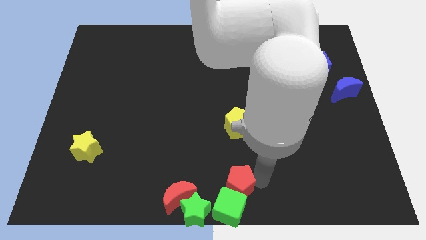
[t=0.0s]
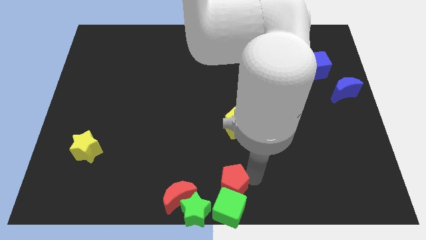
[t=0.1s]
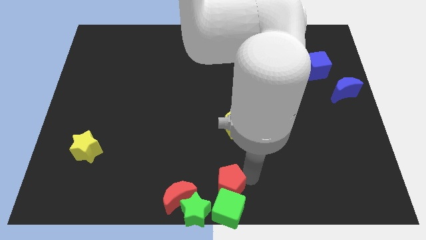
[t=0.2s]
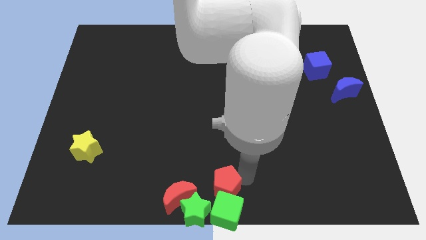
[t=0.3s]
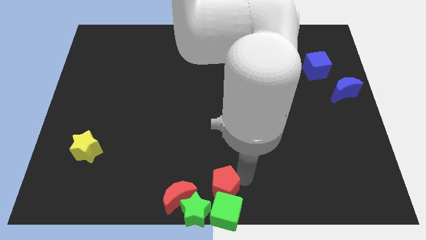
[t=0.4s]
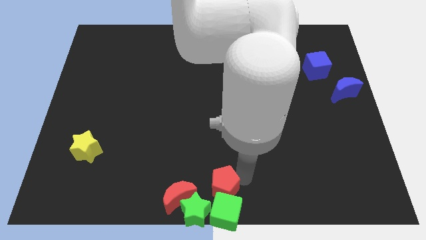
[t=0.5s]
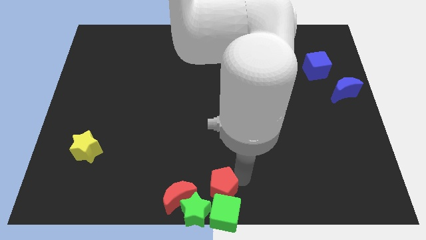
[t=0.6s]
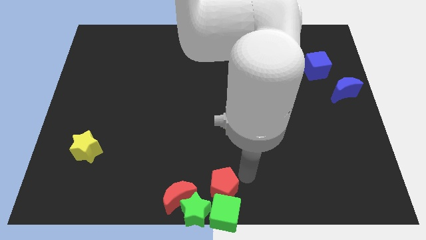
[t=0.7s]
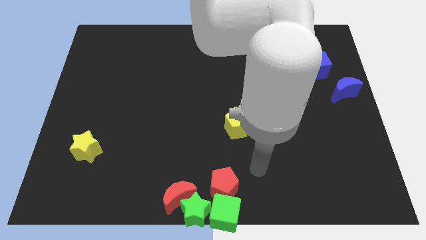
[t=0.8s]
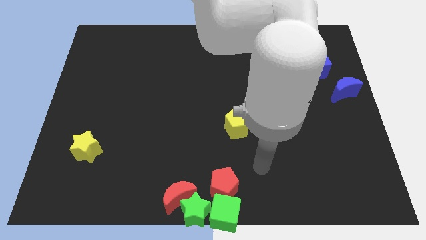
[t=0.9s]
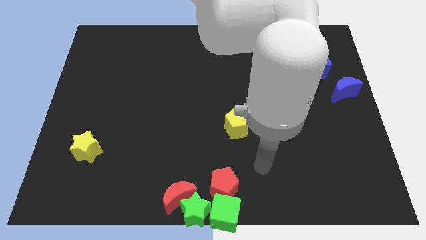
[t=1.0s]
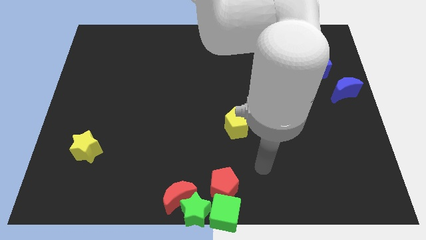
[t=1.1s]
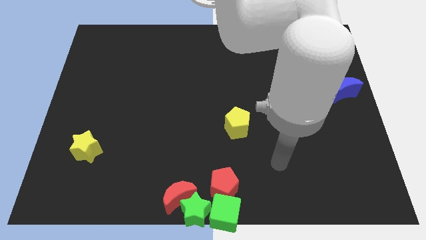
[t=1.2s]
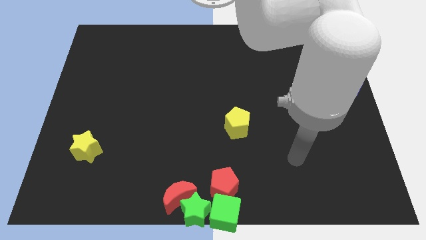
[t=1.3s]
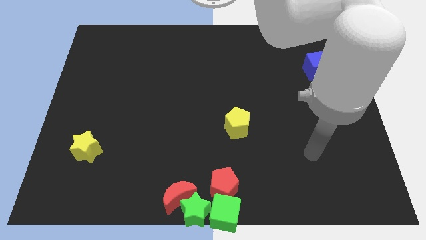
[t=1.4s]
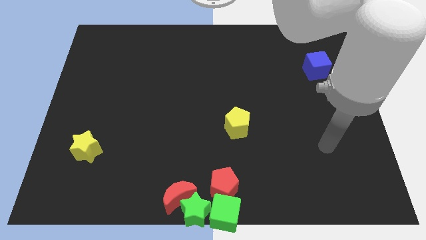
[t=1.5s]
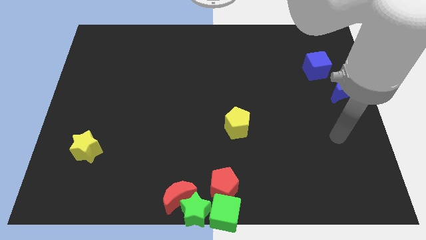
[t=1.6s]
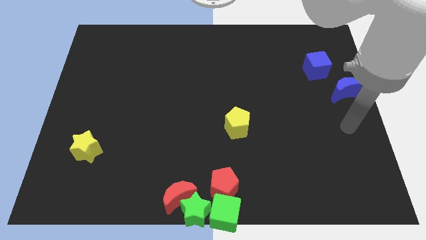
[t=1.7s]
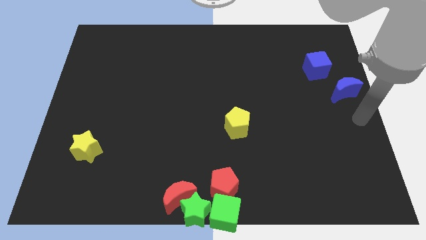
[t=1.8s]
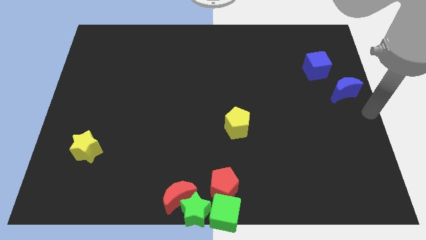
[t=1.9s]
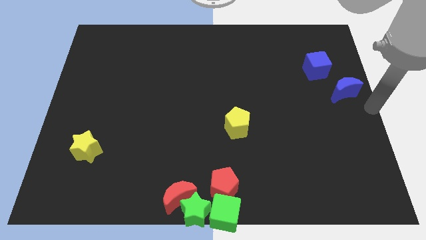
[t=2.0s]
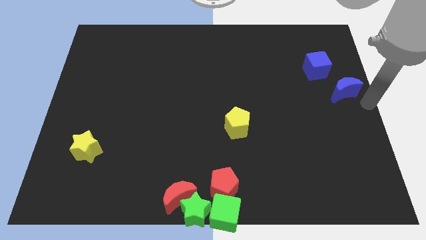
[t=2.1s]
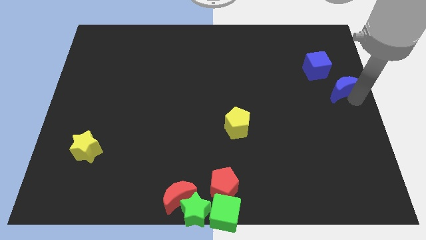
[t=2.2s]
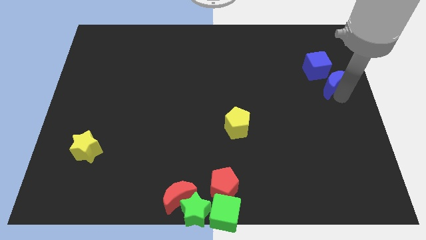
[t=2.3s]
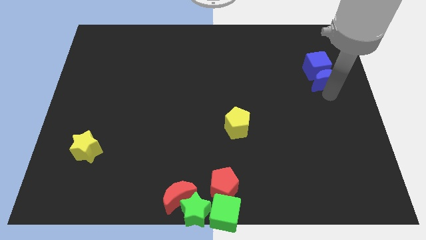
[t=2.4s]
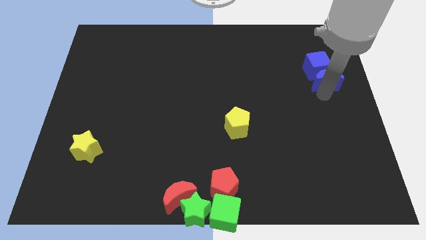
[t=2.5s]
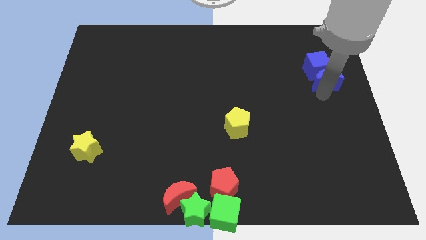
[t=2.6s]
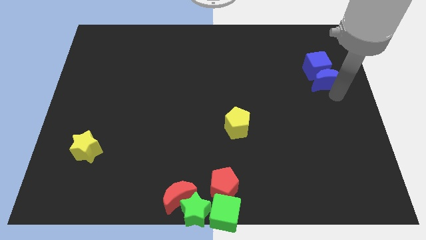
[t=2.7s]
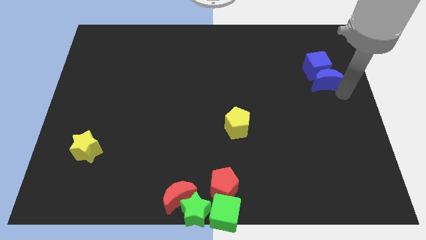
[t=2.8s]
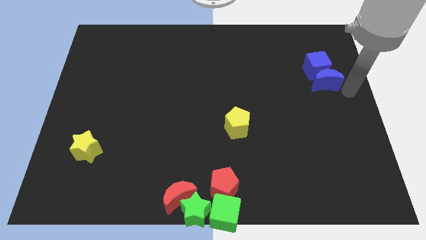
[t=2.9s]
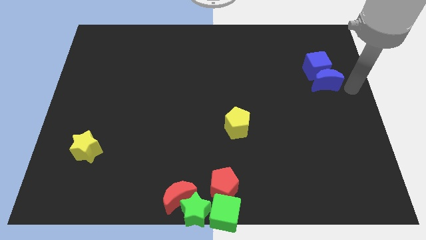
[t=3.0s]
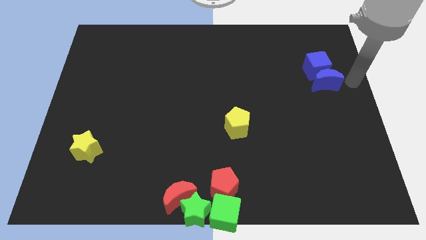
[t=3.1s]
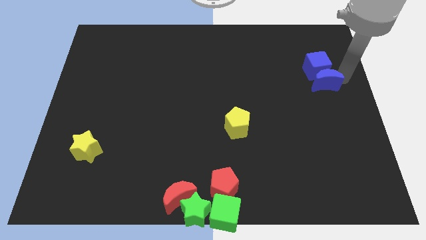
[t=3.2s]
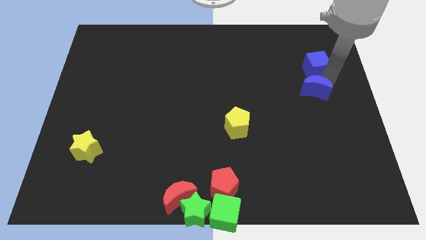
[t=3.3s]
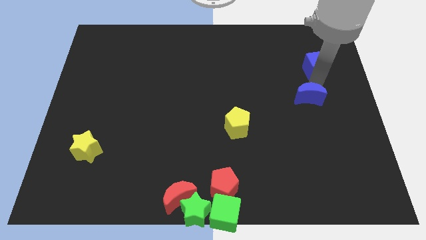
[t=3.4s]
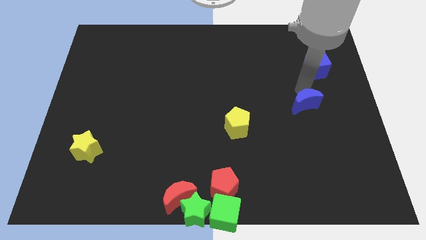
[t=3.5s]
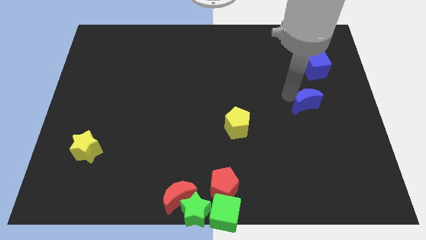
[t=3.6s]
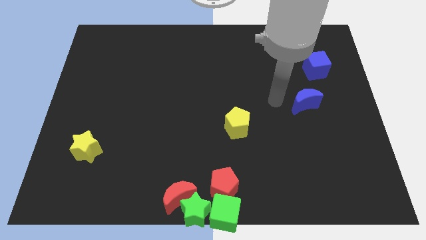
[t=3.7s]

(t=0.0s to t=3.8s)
separate the blue moon from the blue cube

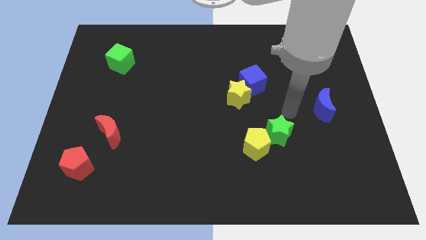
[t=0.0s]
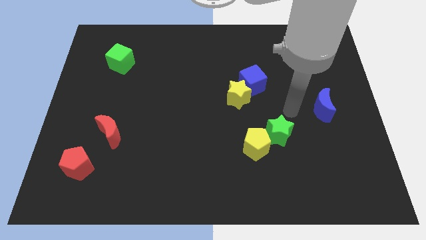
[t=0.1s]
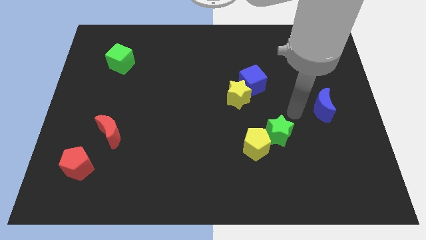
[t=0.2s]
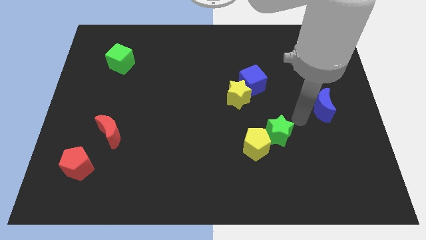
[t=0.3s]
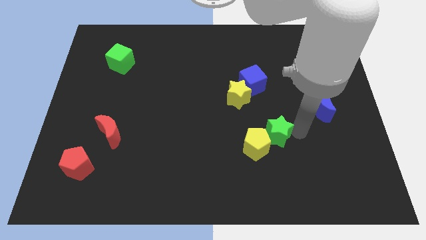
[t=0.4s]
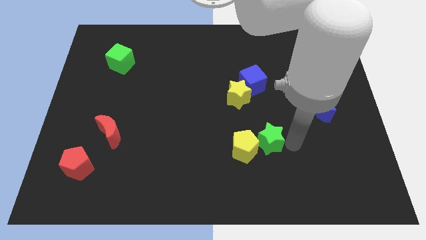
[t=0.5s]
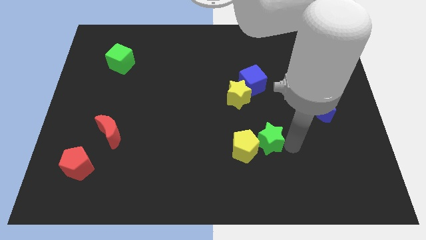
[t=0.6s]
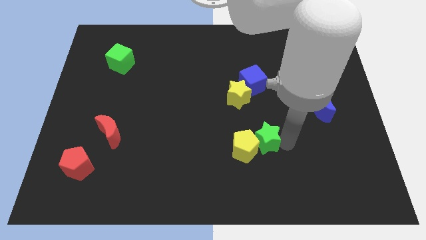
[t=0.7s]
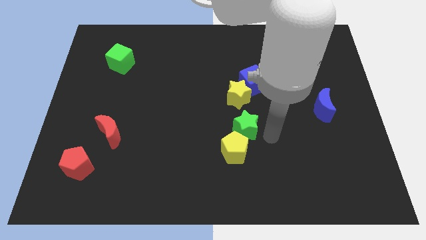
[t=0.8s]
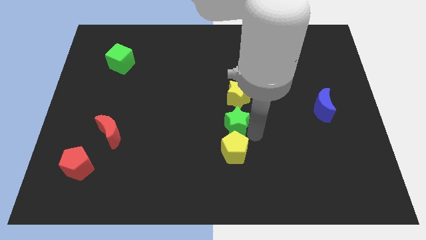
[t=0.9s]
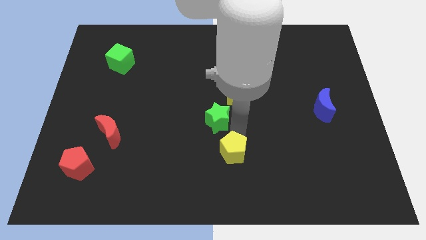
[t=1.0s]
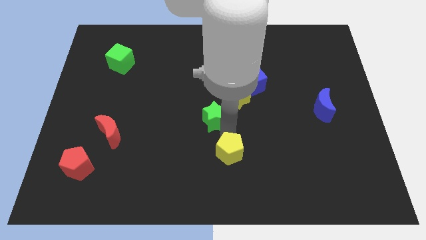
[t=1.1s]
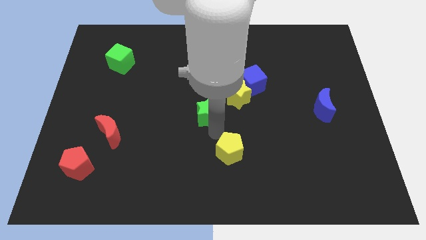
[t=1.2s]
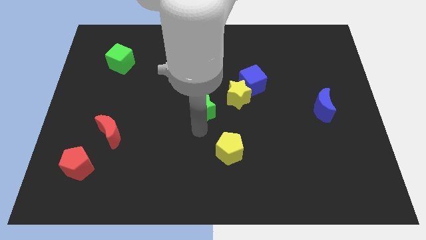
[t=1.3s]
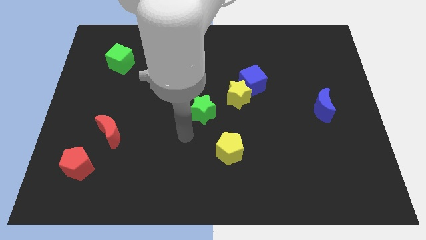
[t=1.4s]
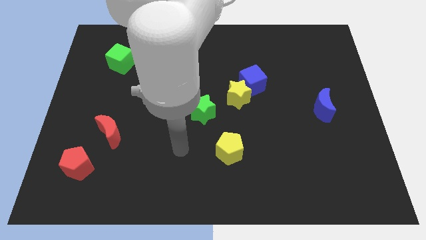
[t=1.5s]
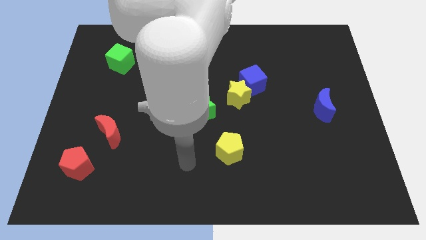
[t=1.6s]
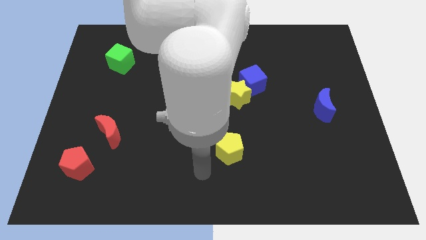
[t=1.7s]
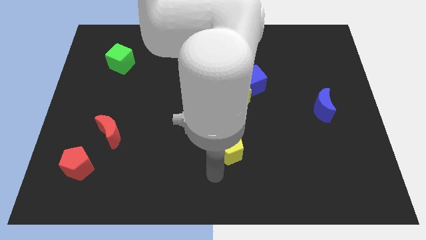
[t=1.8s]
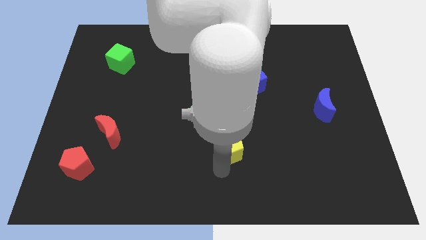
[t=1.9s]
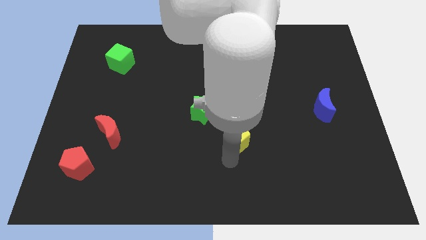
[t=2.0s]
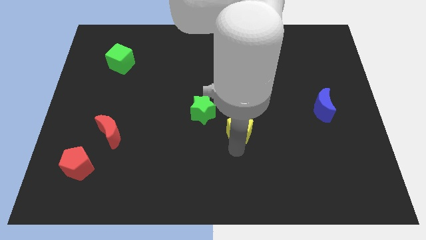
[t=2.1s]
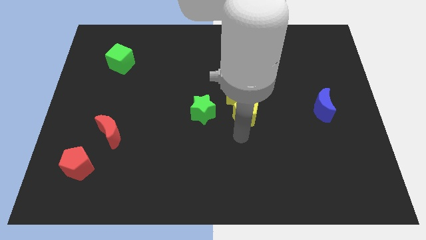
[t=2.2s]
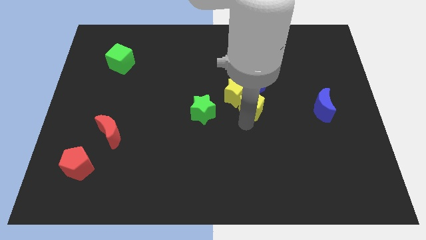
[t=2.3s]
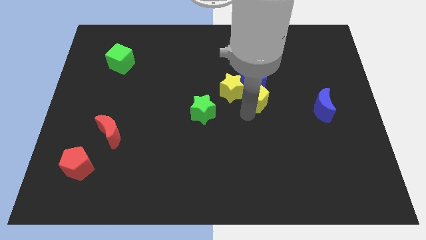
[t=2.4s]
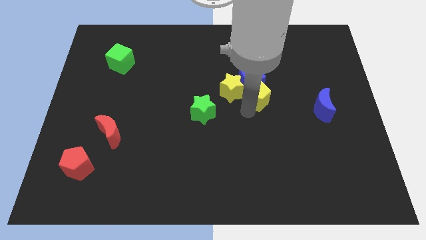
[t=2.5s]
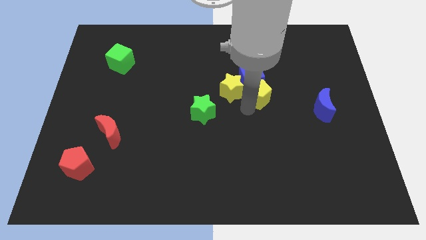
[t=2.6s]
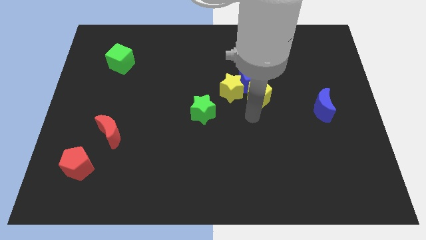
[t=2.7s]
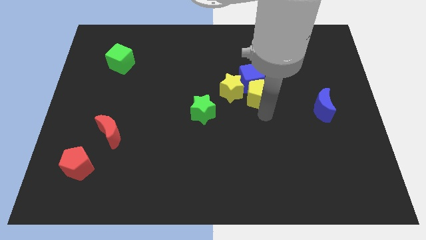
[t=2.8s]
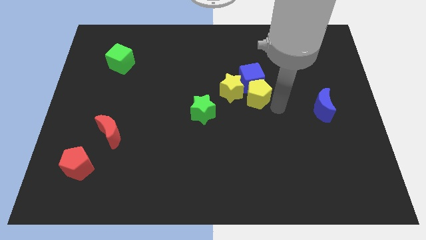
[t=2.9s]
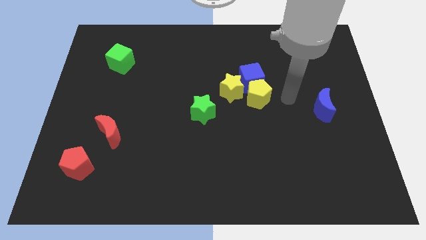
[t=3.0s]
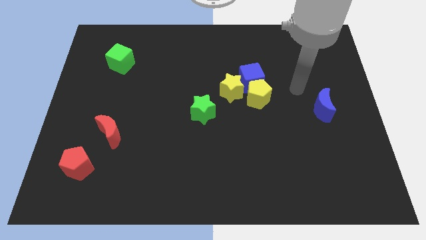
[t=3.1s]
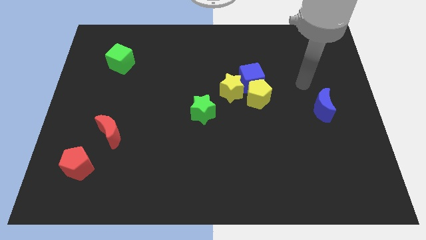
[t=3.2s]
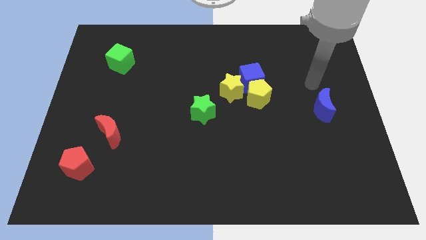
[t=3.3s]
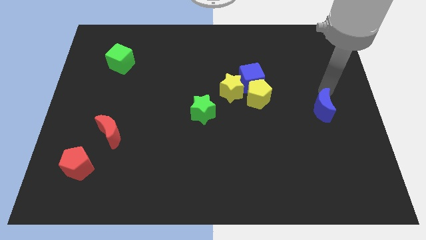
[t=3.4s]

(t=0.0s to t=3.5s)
move the green star and yellow blocks diagonal to each other

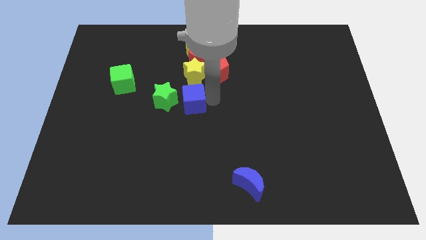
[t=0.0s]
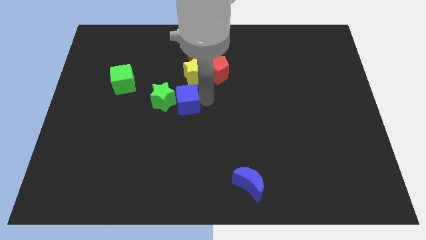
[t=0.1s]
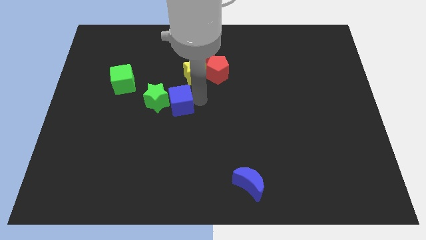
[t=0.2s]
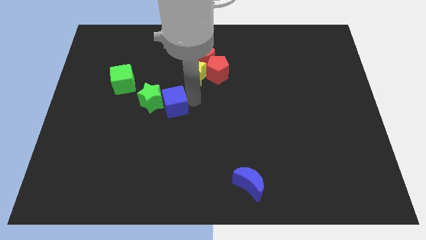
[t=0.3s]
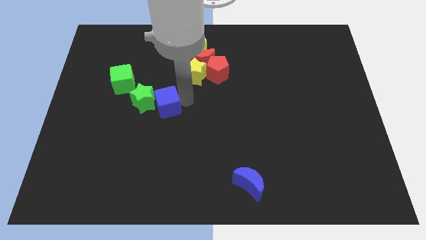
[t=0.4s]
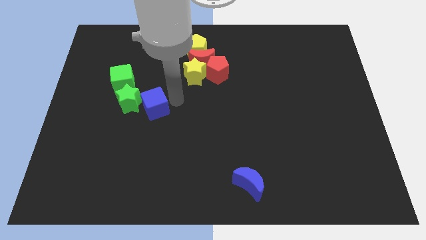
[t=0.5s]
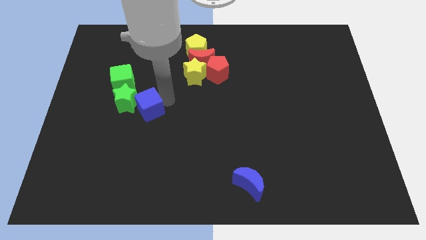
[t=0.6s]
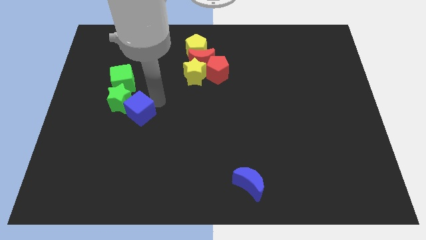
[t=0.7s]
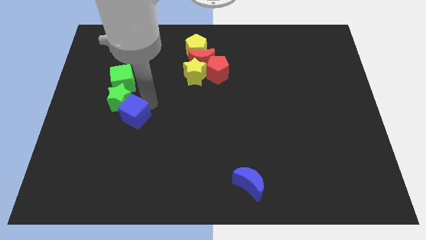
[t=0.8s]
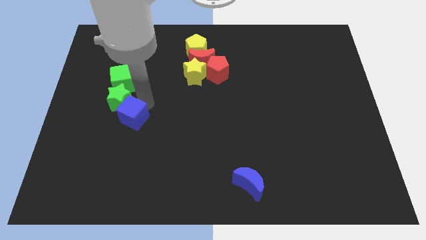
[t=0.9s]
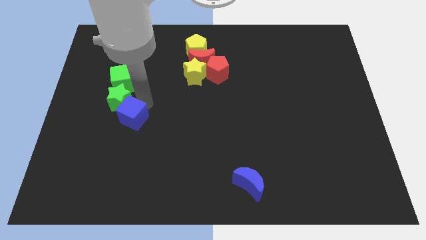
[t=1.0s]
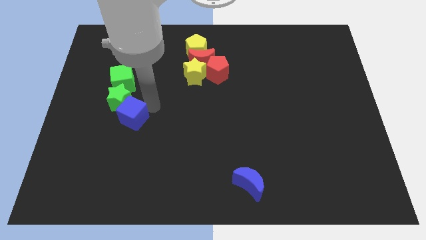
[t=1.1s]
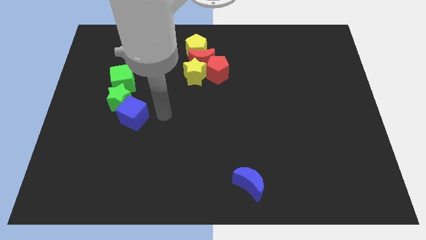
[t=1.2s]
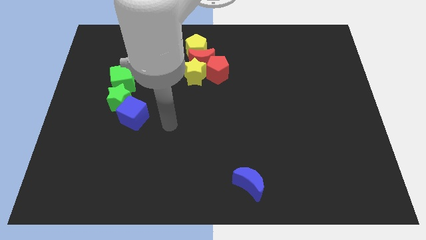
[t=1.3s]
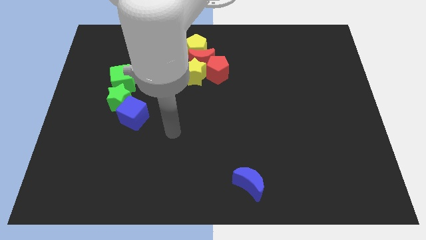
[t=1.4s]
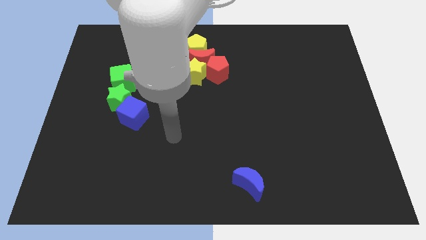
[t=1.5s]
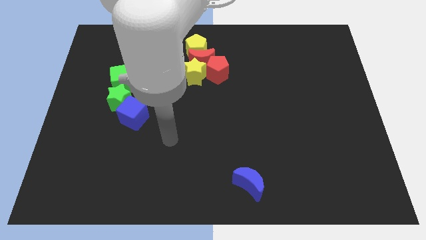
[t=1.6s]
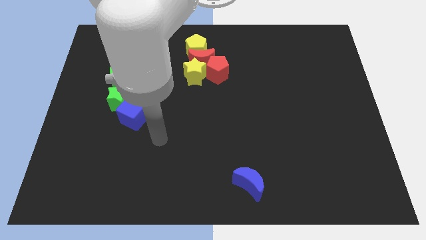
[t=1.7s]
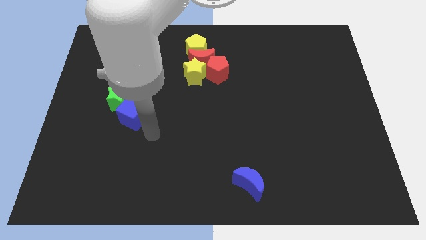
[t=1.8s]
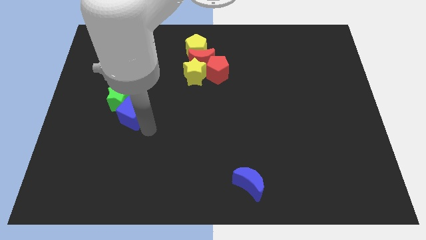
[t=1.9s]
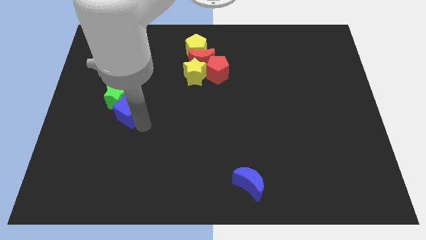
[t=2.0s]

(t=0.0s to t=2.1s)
move the blue cube at the below right side of the green star
